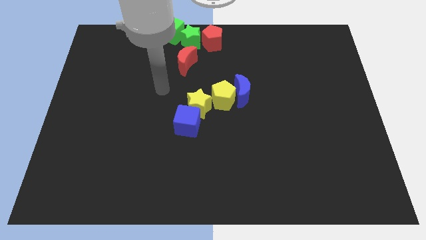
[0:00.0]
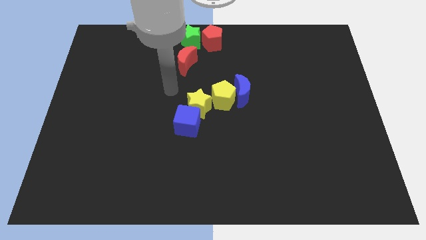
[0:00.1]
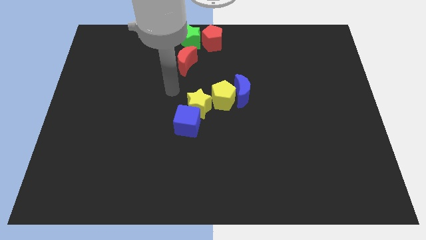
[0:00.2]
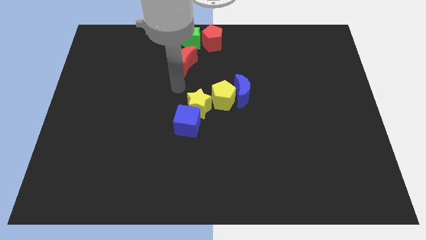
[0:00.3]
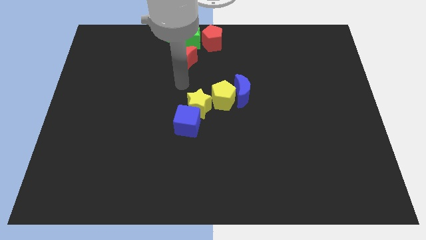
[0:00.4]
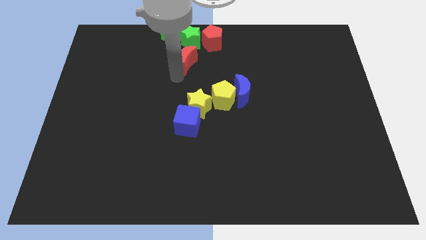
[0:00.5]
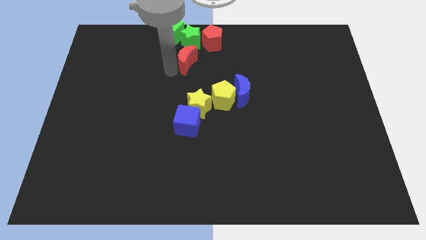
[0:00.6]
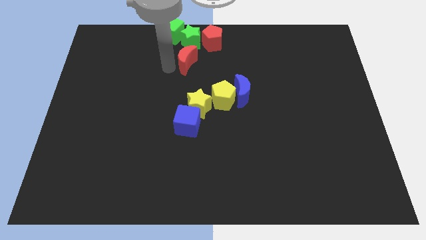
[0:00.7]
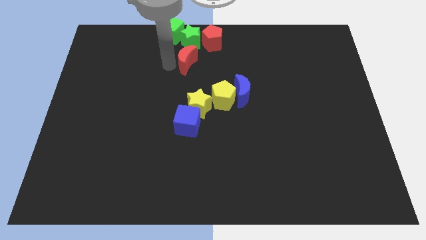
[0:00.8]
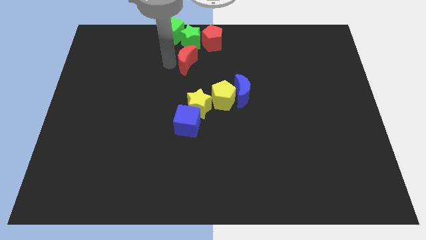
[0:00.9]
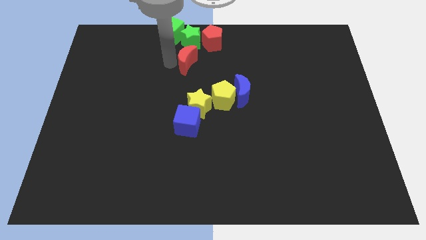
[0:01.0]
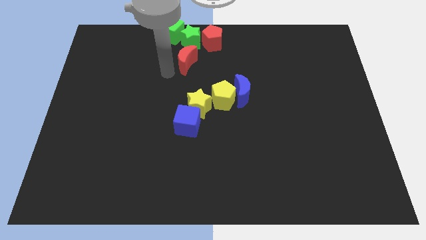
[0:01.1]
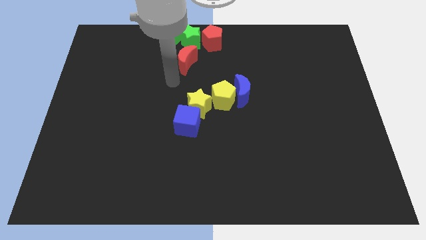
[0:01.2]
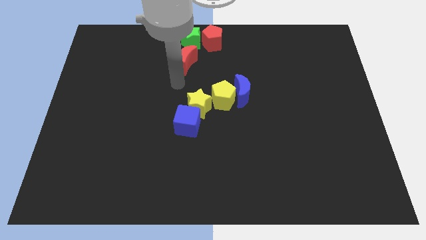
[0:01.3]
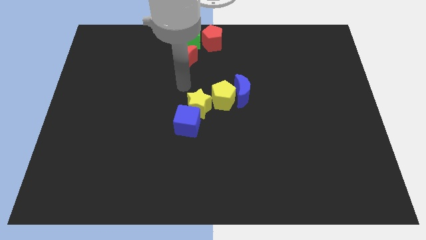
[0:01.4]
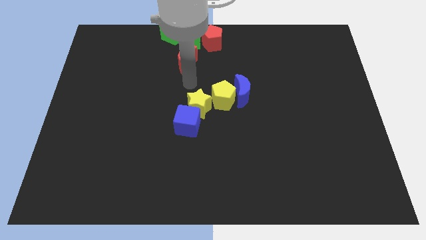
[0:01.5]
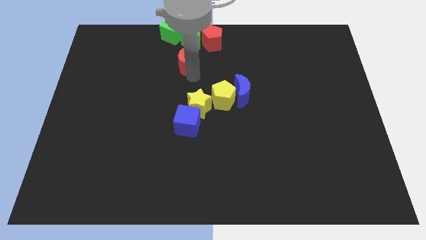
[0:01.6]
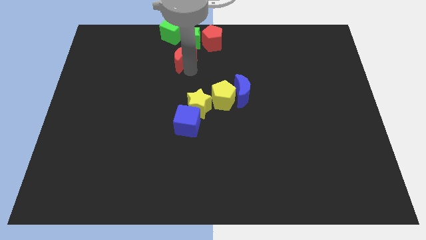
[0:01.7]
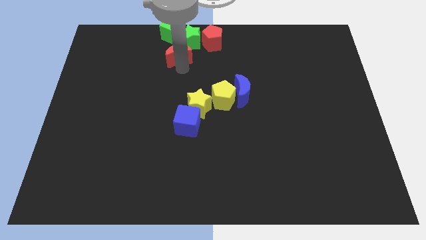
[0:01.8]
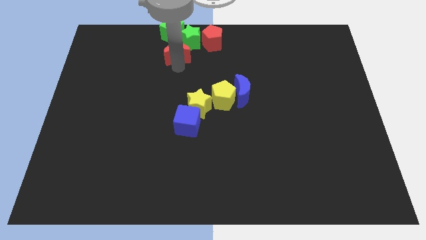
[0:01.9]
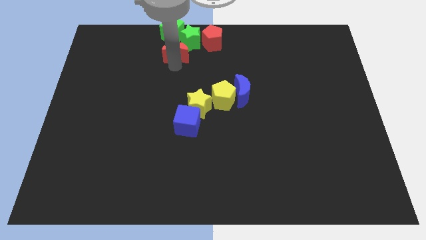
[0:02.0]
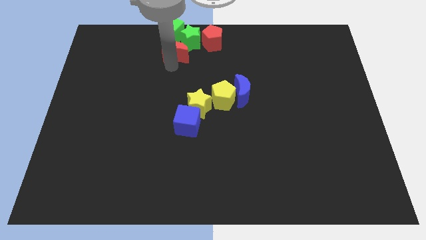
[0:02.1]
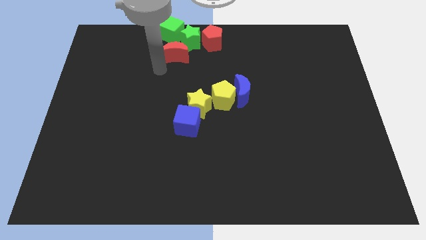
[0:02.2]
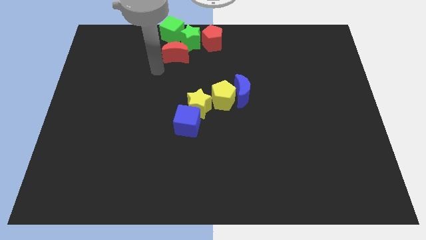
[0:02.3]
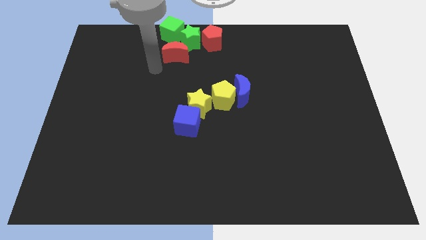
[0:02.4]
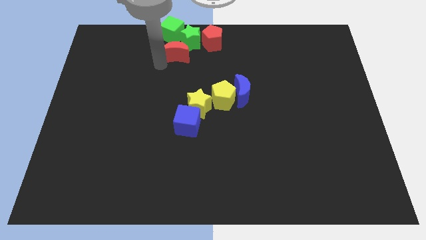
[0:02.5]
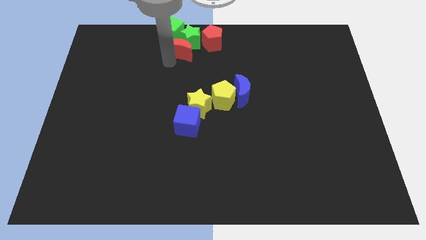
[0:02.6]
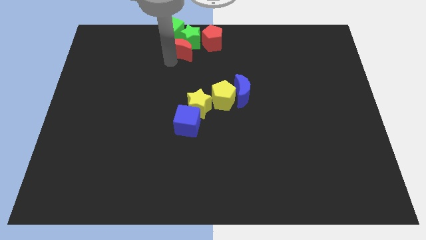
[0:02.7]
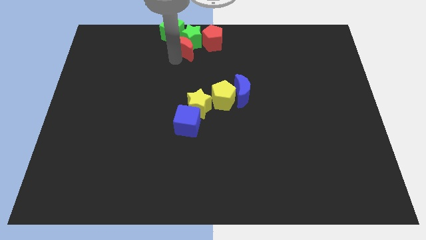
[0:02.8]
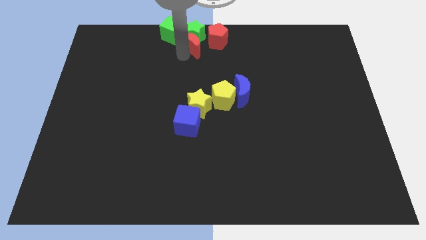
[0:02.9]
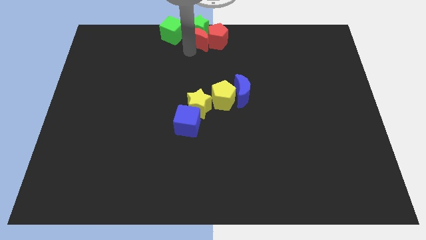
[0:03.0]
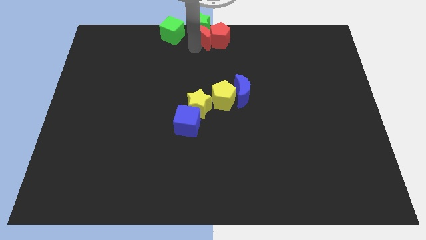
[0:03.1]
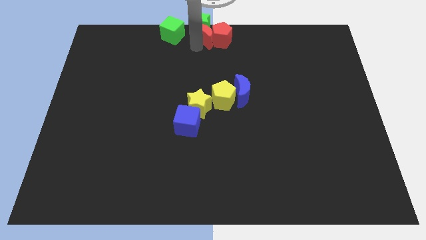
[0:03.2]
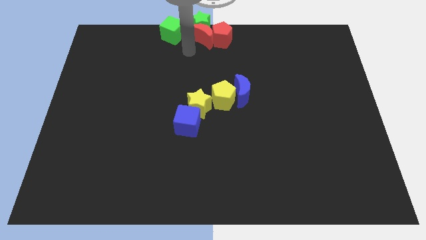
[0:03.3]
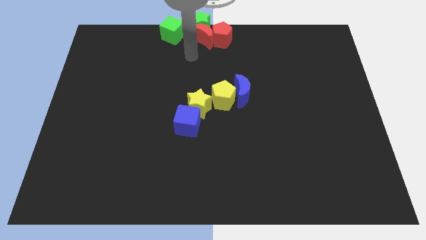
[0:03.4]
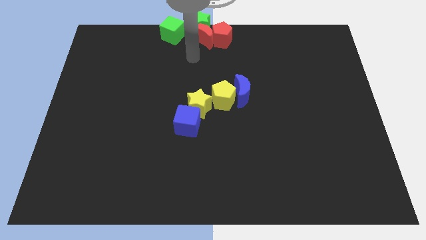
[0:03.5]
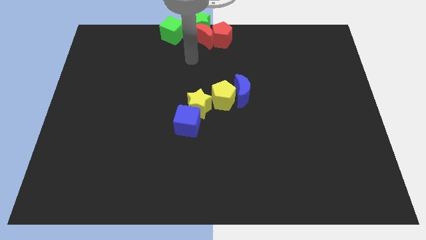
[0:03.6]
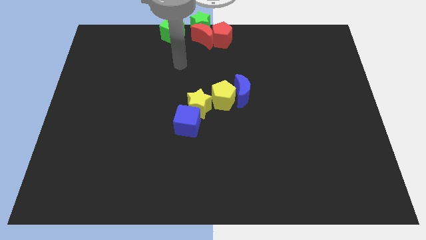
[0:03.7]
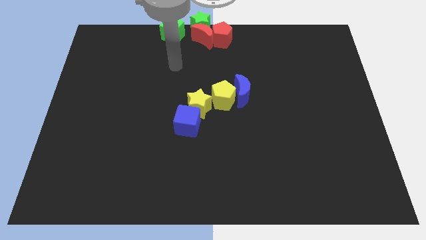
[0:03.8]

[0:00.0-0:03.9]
move the red moon into green star

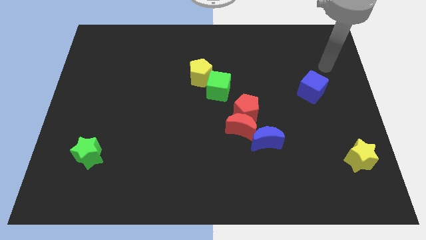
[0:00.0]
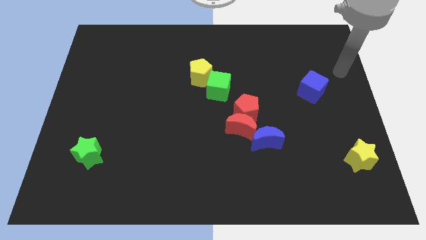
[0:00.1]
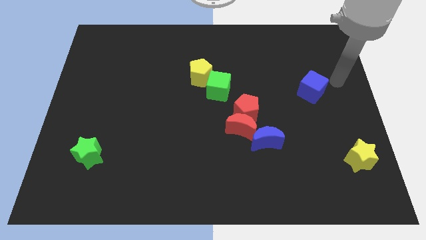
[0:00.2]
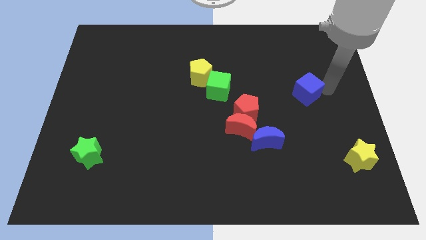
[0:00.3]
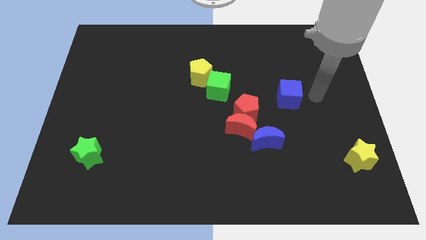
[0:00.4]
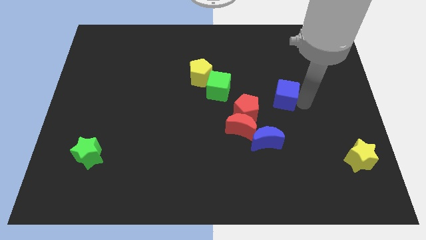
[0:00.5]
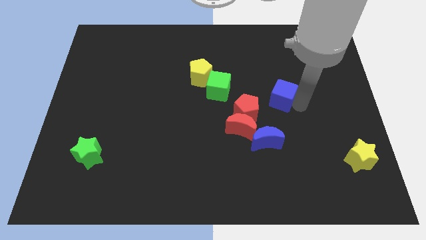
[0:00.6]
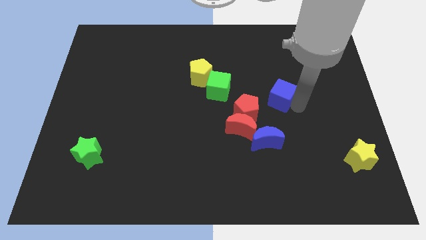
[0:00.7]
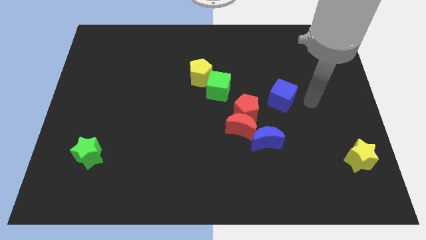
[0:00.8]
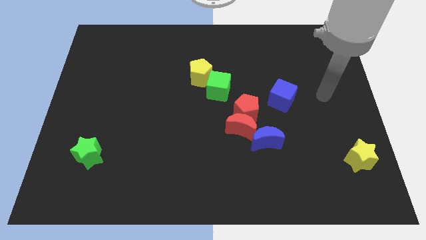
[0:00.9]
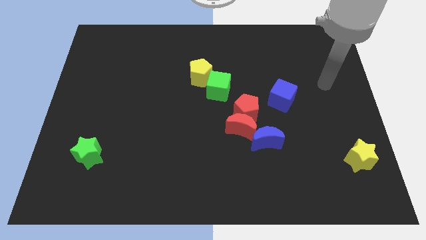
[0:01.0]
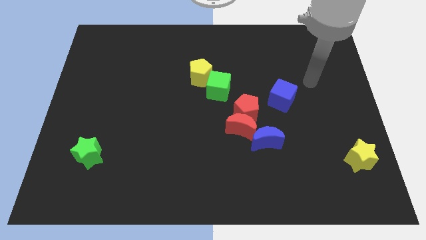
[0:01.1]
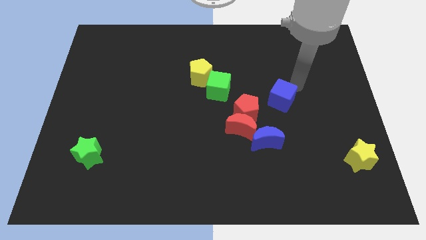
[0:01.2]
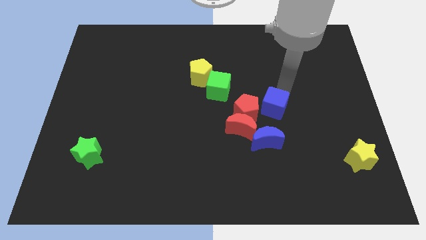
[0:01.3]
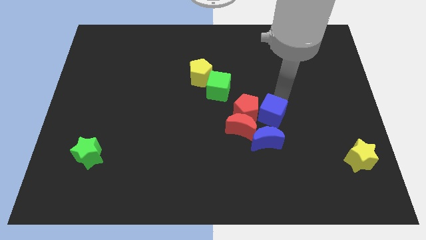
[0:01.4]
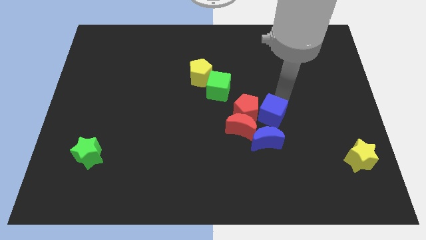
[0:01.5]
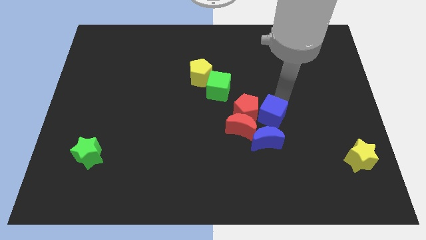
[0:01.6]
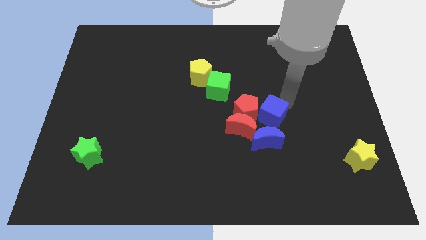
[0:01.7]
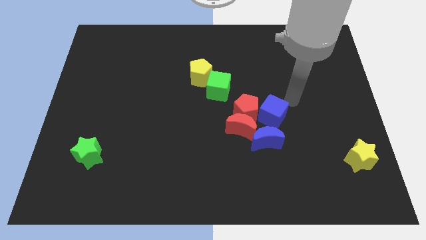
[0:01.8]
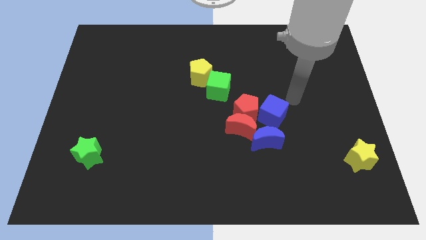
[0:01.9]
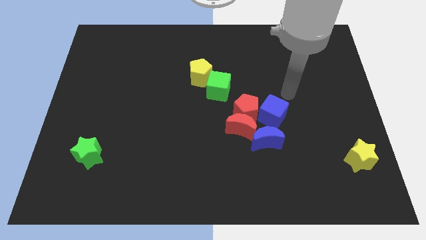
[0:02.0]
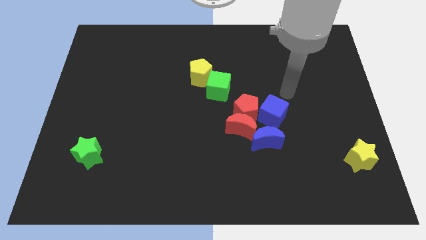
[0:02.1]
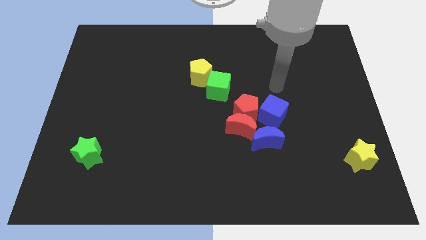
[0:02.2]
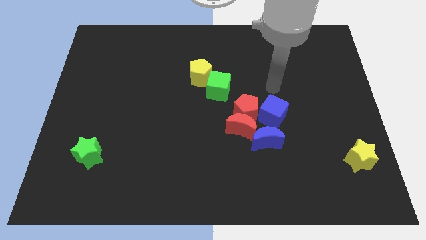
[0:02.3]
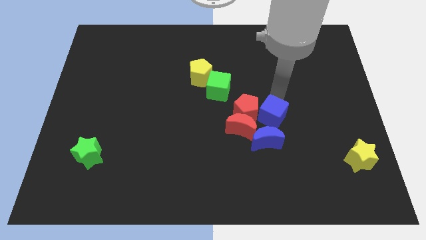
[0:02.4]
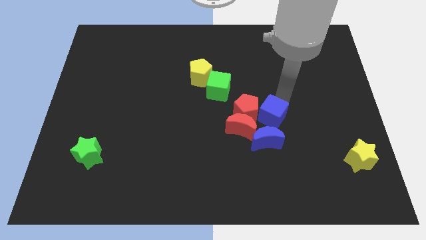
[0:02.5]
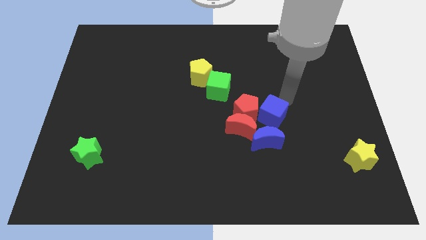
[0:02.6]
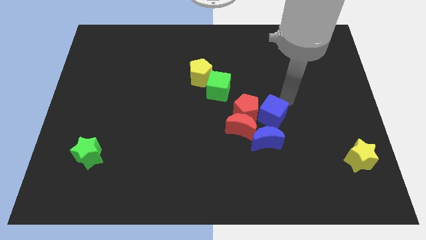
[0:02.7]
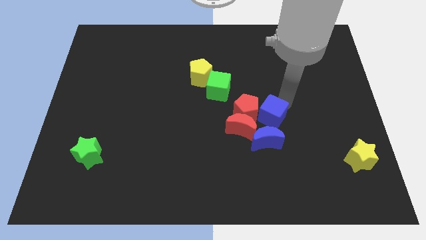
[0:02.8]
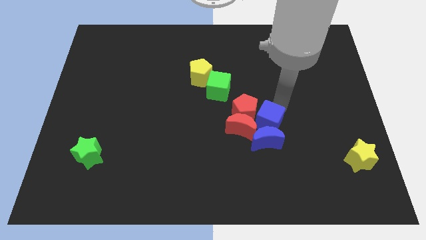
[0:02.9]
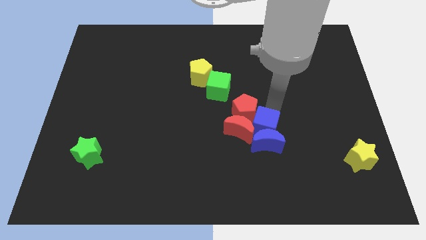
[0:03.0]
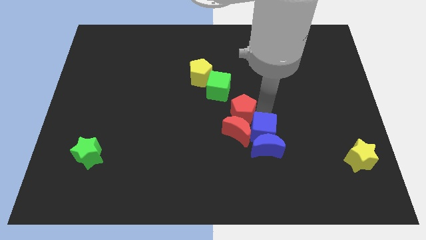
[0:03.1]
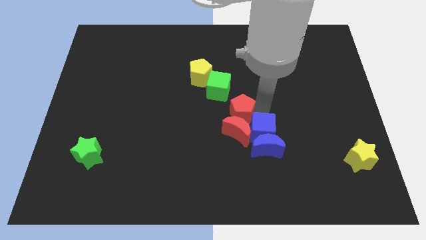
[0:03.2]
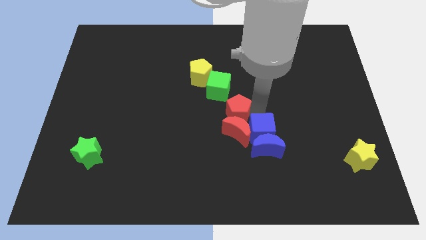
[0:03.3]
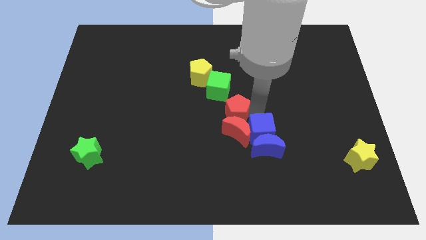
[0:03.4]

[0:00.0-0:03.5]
push the blue cube at the top of the blue crescent

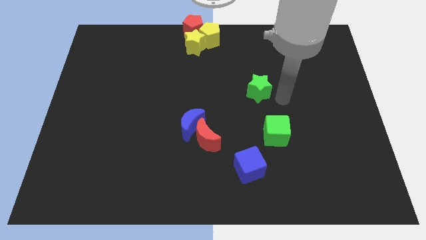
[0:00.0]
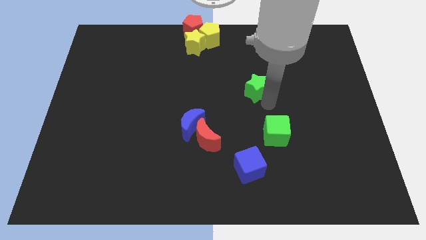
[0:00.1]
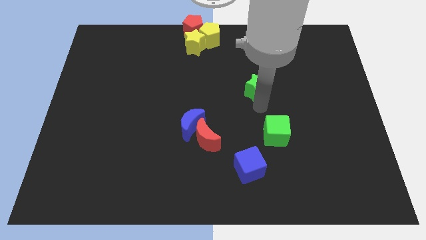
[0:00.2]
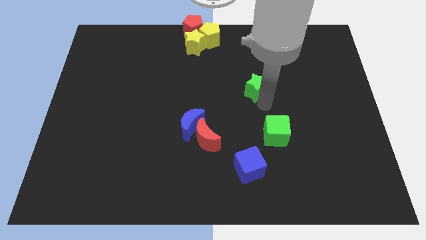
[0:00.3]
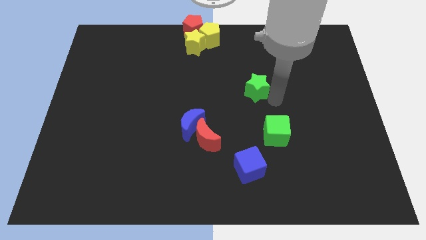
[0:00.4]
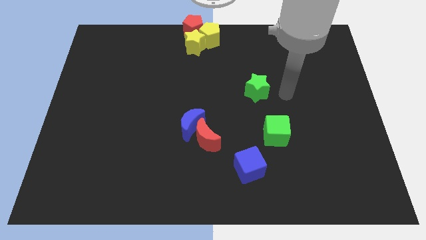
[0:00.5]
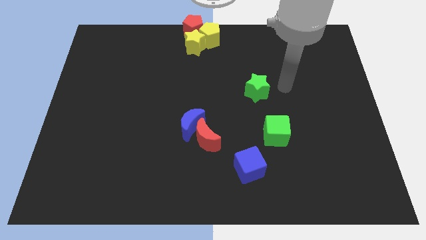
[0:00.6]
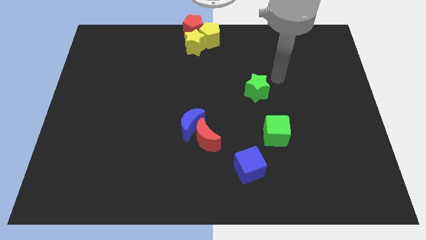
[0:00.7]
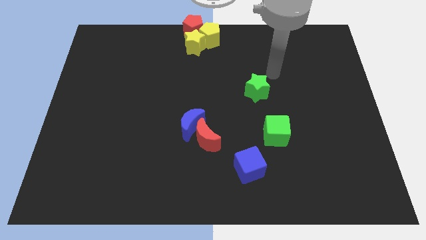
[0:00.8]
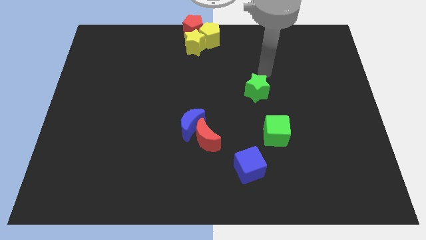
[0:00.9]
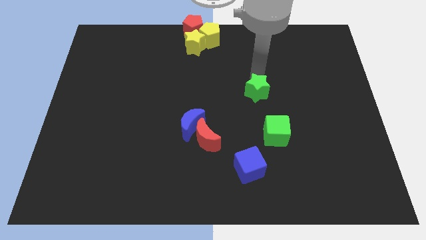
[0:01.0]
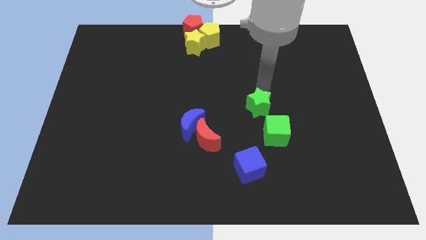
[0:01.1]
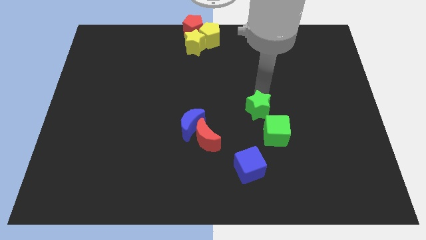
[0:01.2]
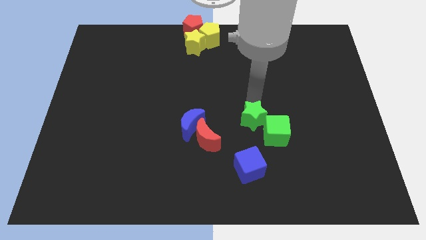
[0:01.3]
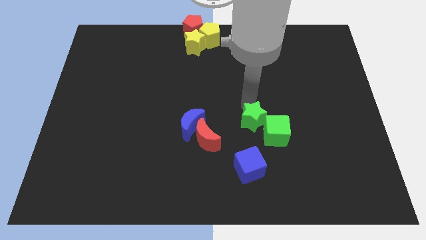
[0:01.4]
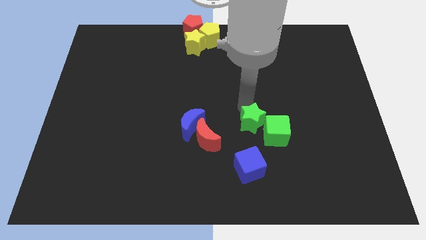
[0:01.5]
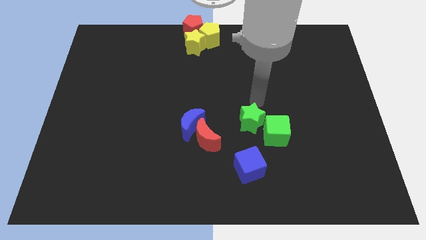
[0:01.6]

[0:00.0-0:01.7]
push green star into green cube
